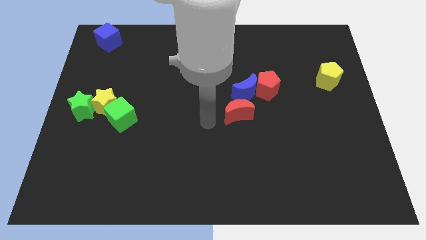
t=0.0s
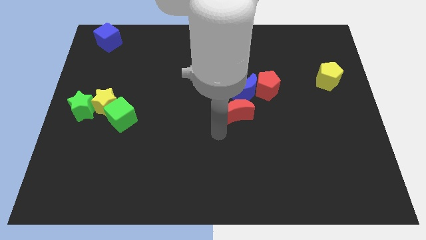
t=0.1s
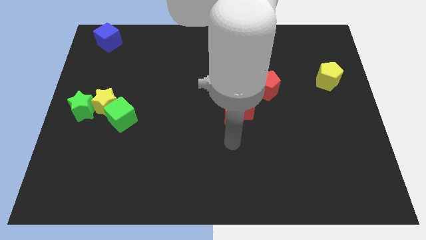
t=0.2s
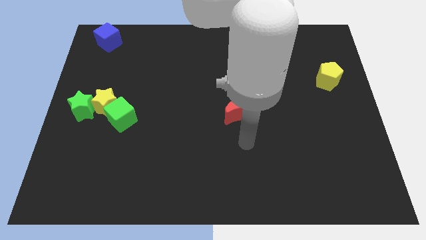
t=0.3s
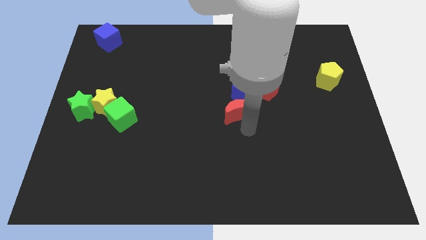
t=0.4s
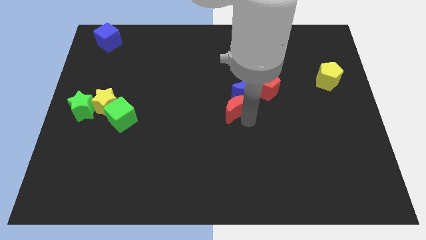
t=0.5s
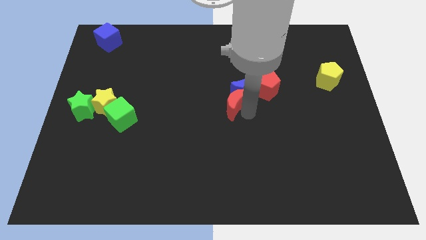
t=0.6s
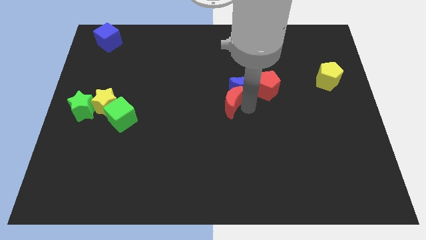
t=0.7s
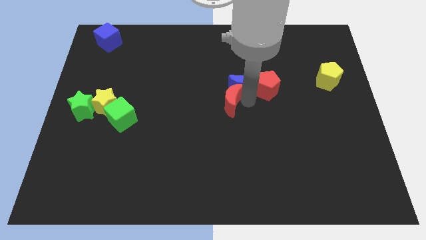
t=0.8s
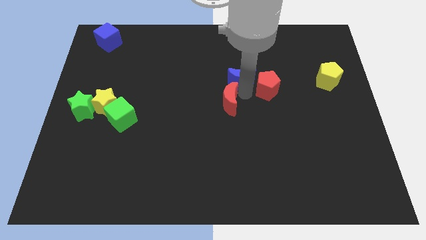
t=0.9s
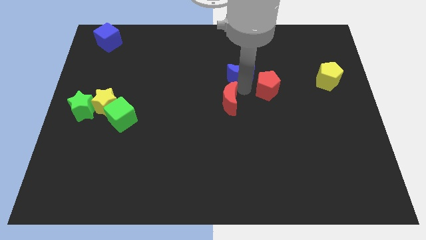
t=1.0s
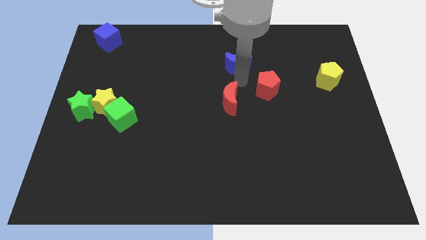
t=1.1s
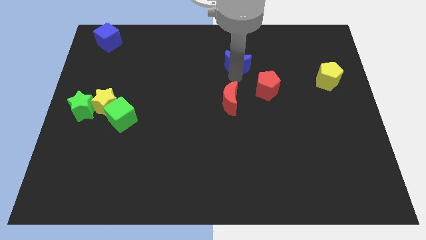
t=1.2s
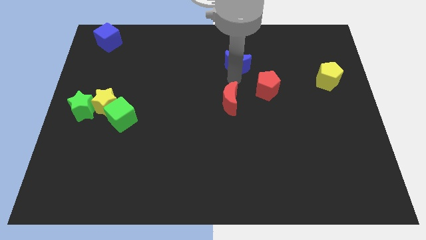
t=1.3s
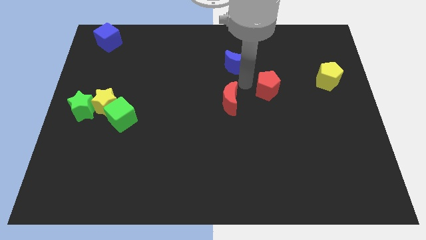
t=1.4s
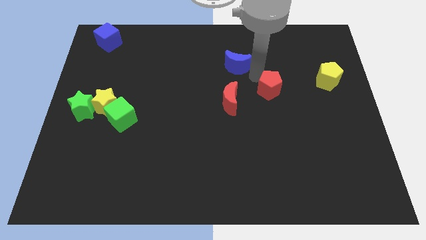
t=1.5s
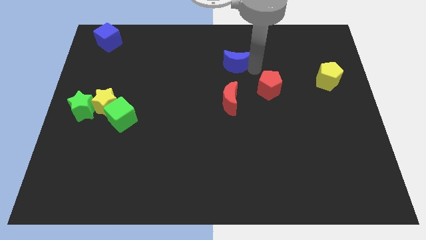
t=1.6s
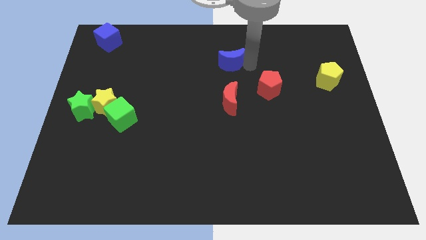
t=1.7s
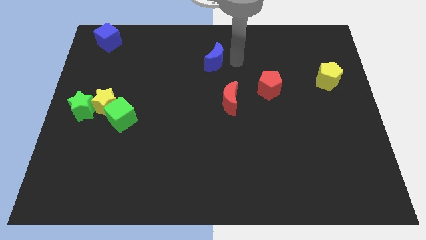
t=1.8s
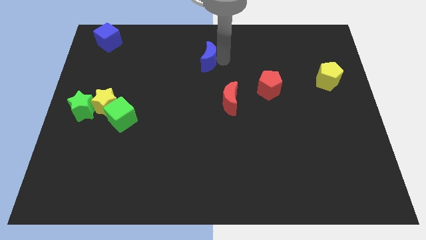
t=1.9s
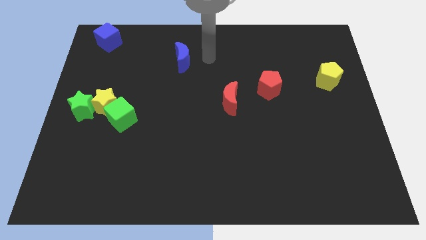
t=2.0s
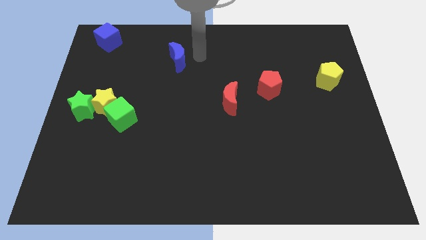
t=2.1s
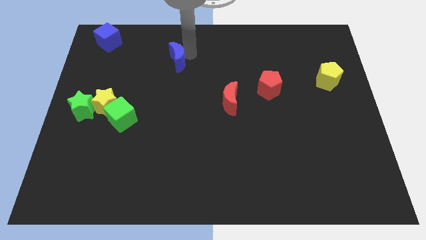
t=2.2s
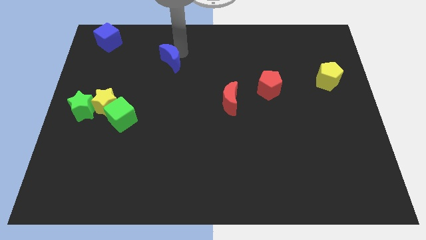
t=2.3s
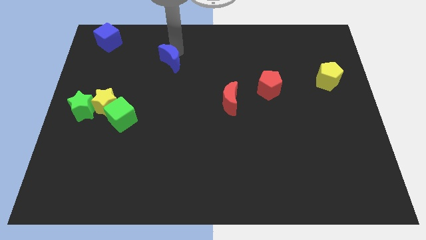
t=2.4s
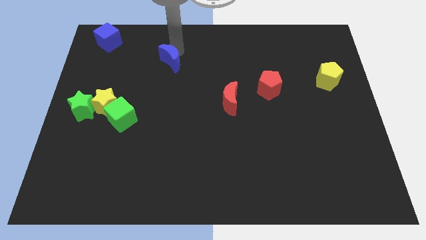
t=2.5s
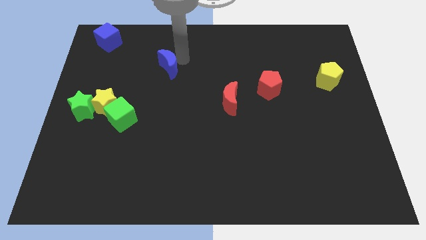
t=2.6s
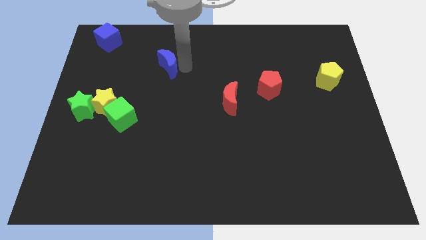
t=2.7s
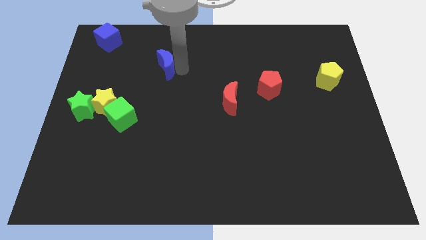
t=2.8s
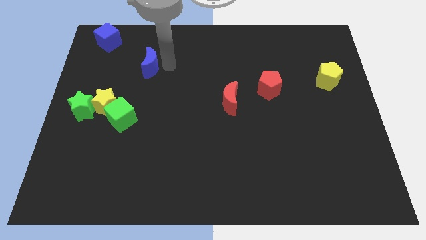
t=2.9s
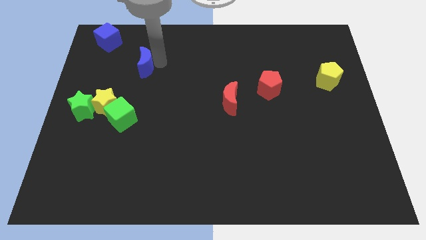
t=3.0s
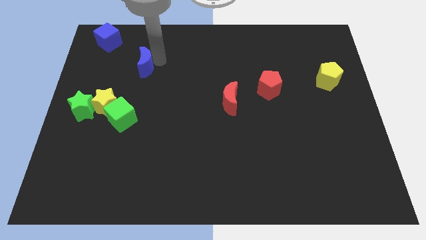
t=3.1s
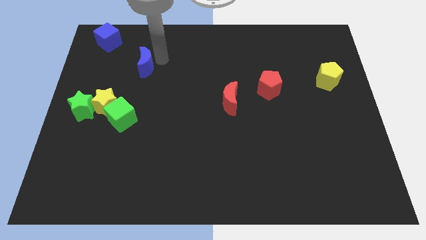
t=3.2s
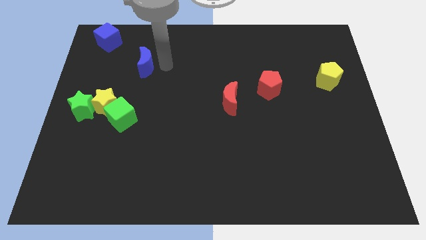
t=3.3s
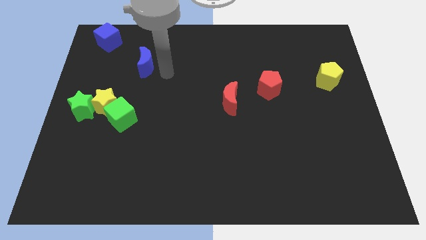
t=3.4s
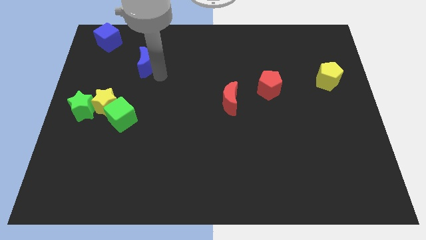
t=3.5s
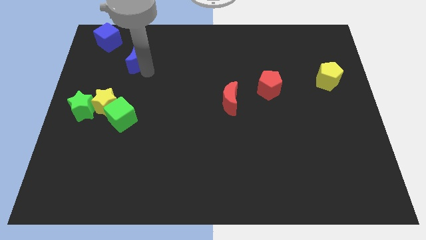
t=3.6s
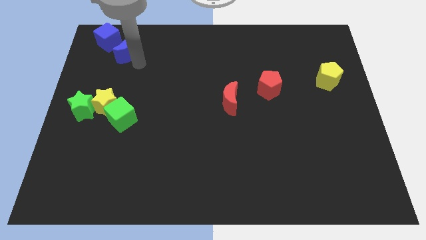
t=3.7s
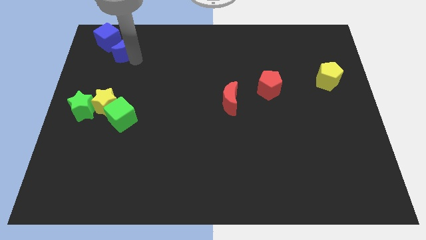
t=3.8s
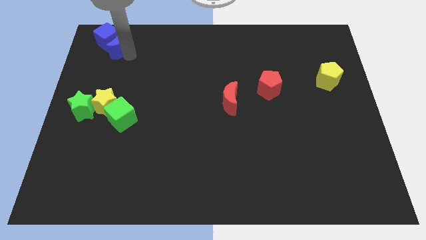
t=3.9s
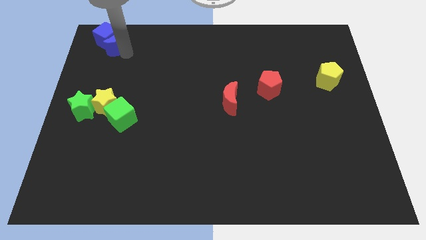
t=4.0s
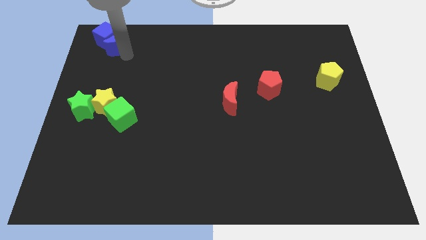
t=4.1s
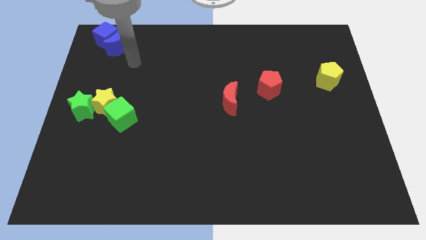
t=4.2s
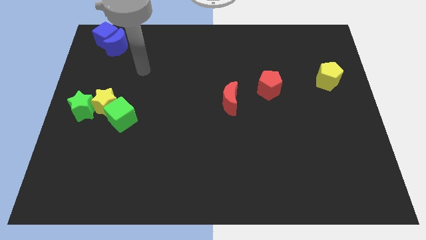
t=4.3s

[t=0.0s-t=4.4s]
place the blue crescent into the blue cube

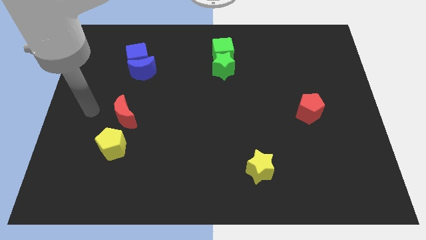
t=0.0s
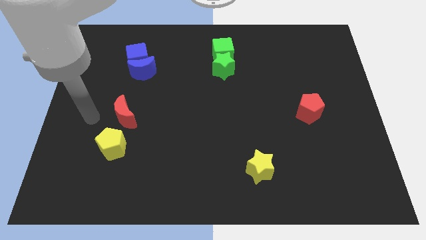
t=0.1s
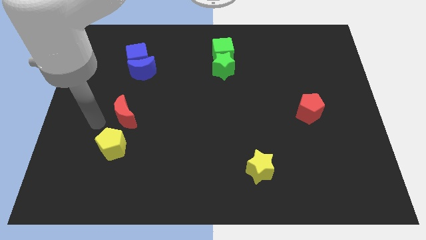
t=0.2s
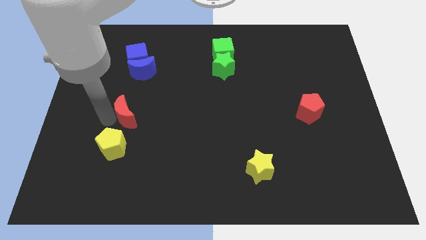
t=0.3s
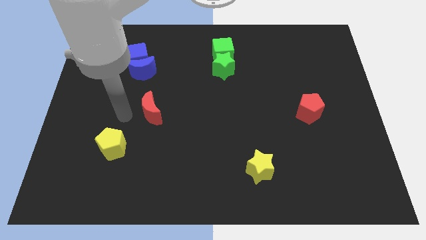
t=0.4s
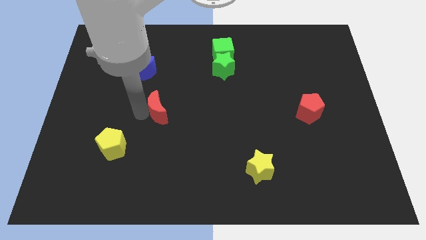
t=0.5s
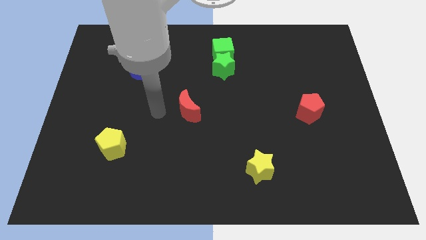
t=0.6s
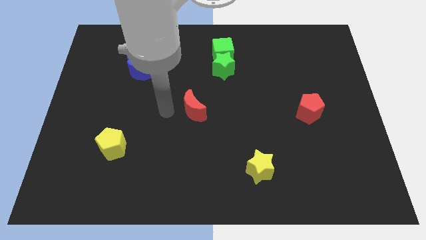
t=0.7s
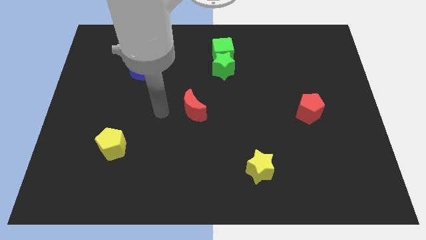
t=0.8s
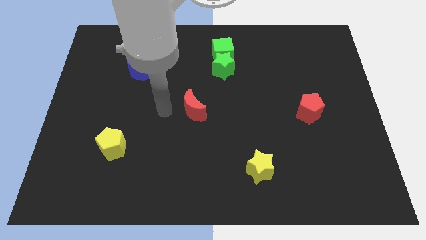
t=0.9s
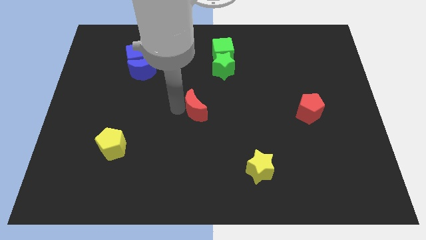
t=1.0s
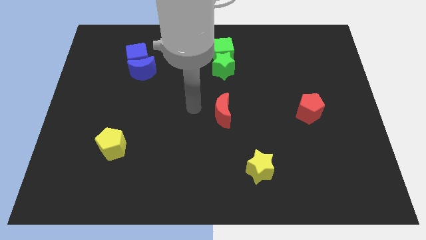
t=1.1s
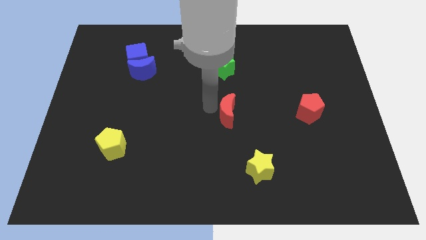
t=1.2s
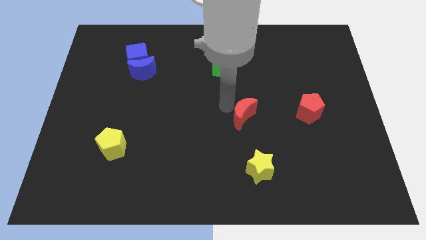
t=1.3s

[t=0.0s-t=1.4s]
place the red moon at the center of the board

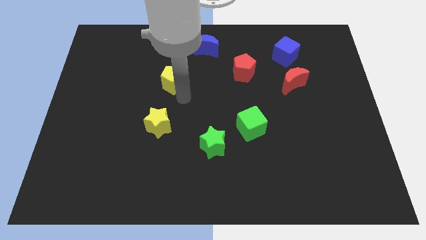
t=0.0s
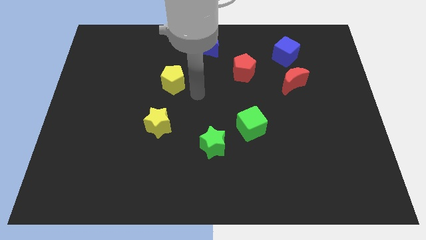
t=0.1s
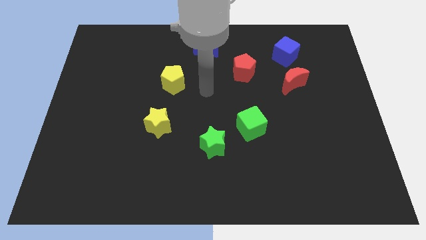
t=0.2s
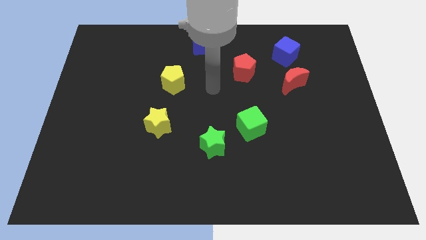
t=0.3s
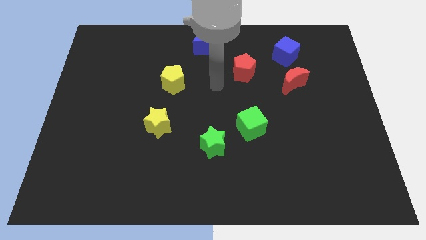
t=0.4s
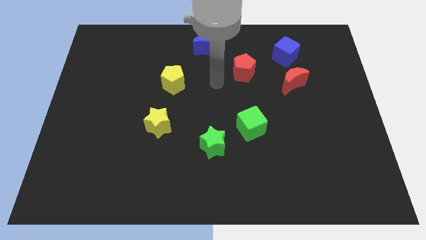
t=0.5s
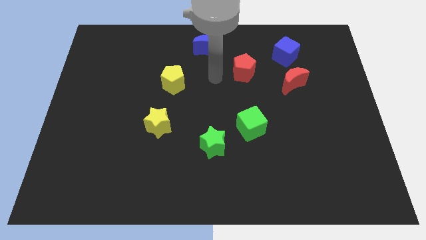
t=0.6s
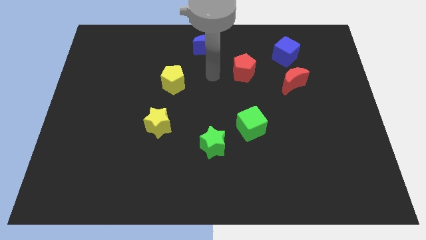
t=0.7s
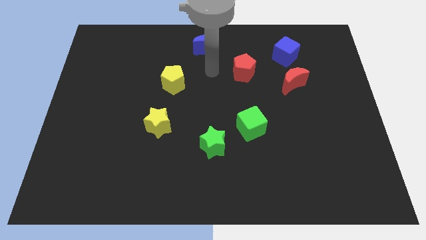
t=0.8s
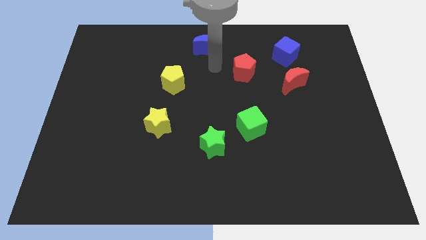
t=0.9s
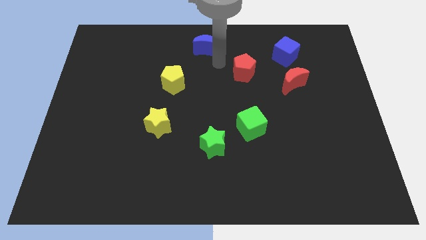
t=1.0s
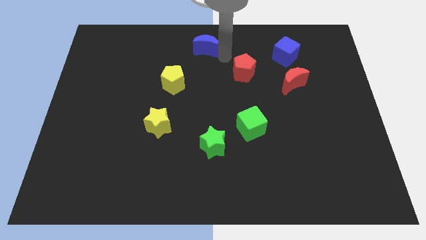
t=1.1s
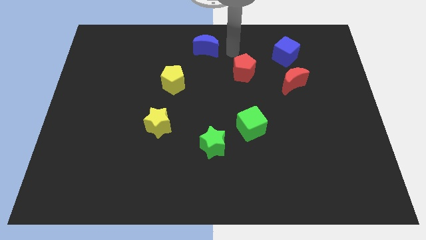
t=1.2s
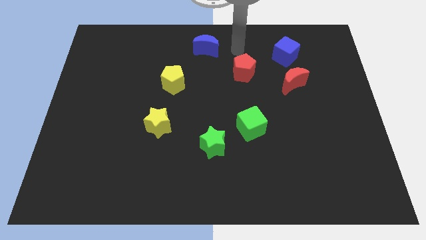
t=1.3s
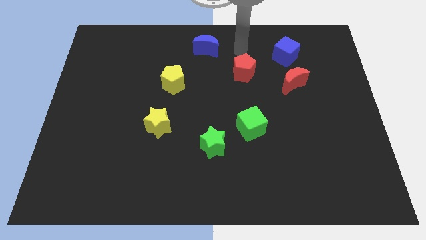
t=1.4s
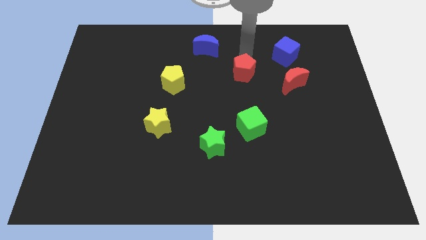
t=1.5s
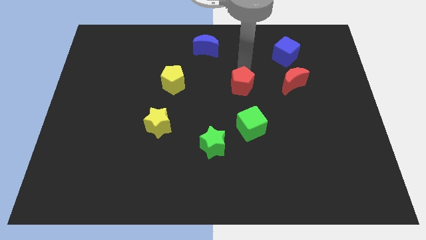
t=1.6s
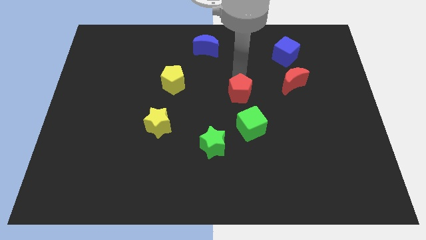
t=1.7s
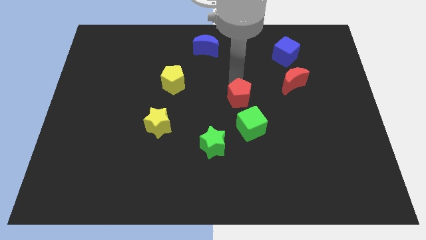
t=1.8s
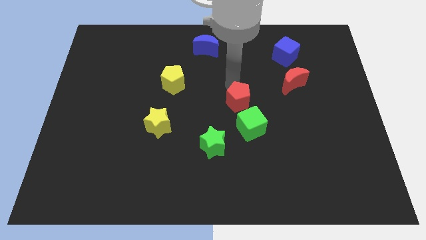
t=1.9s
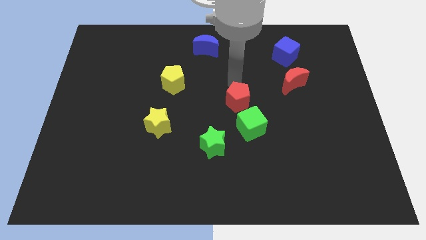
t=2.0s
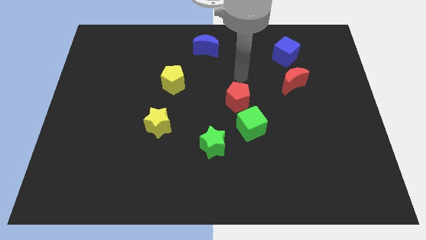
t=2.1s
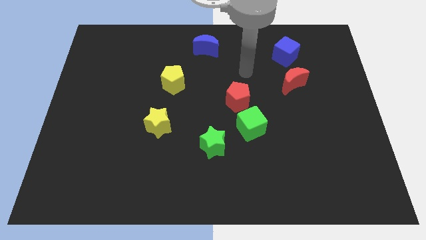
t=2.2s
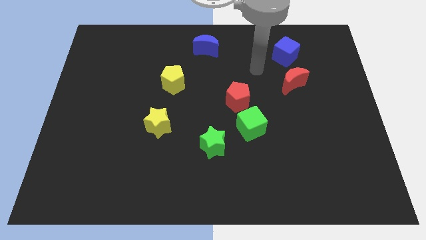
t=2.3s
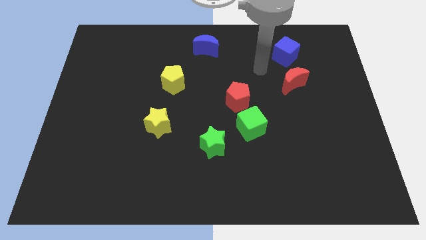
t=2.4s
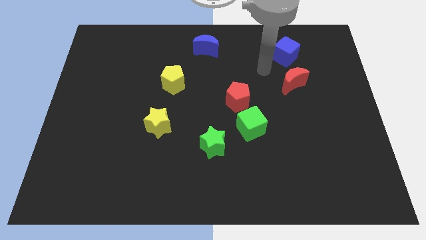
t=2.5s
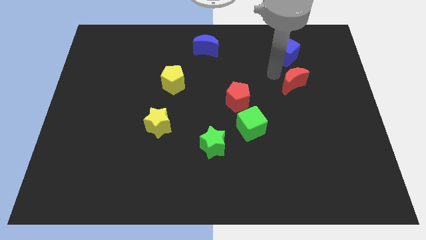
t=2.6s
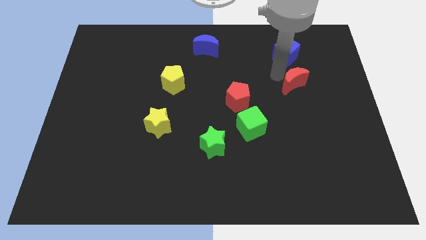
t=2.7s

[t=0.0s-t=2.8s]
push the red pentagon downward
